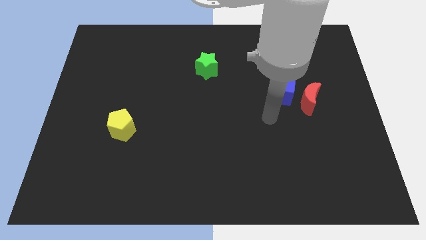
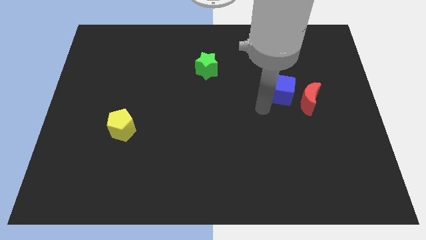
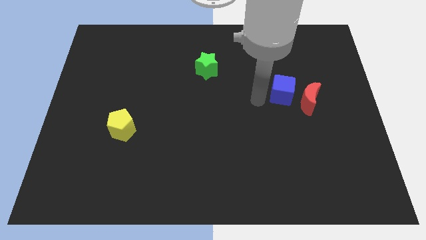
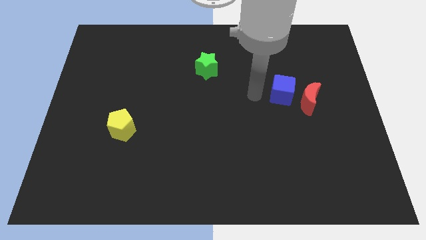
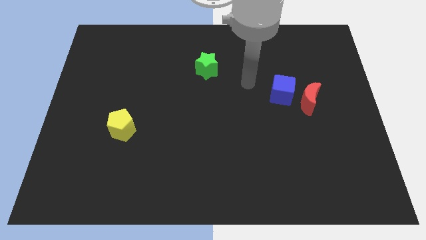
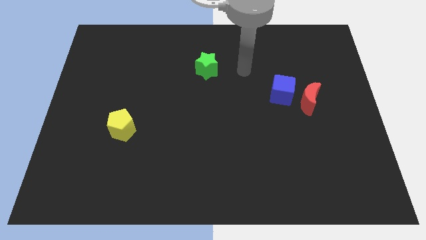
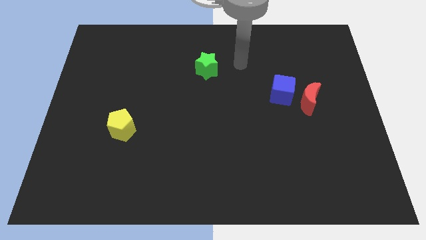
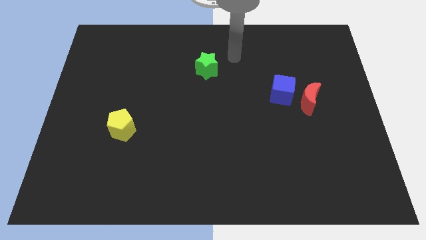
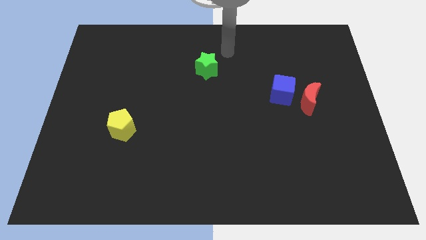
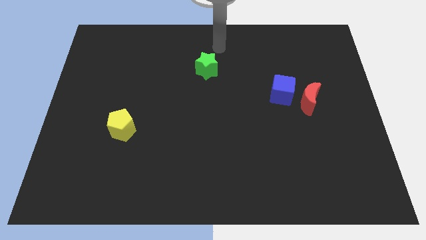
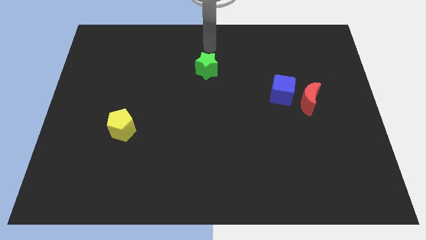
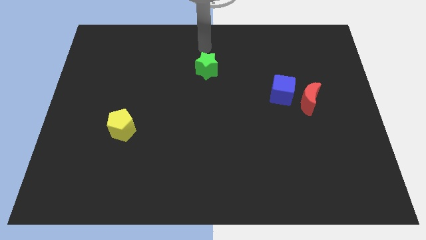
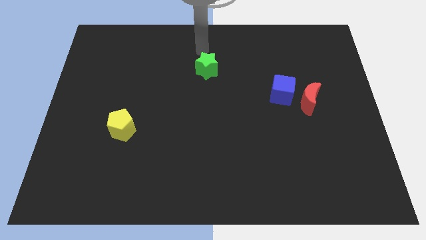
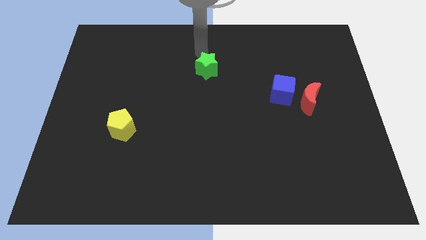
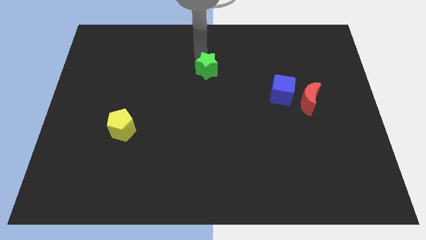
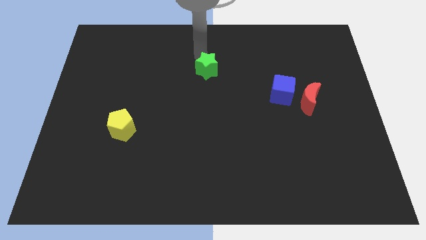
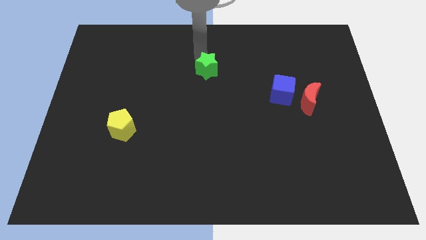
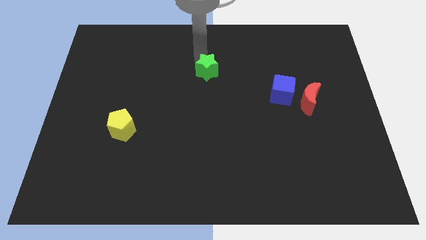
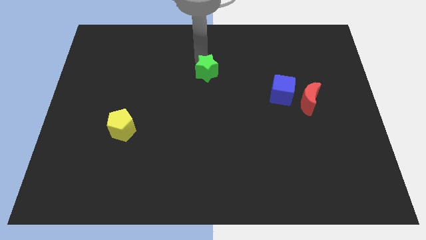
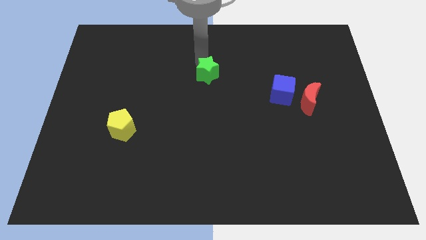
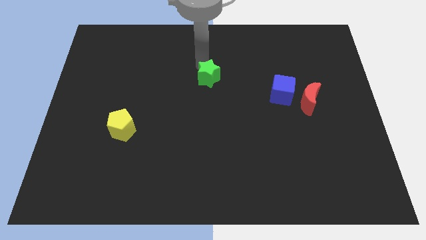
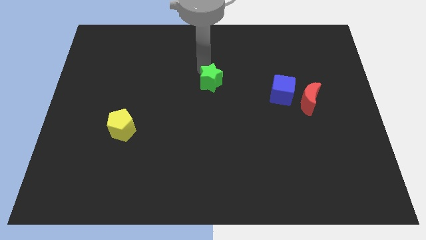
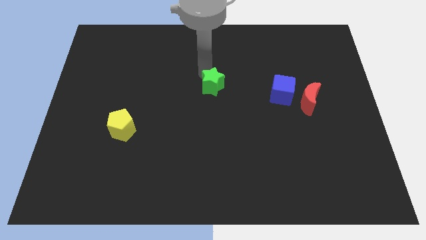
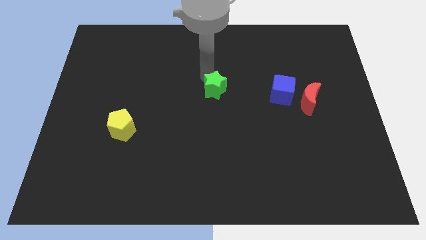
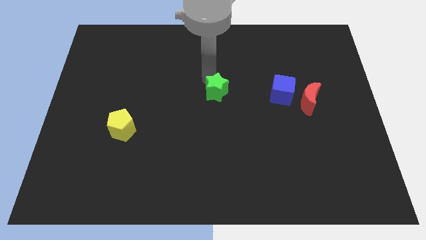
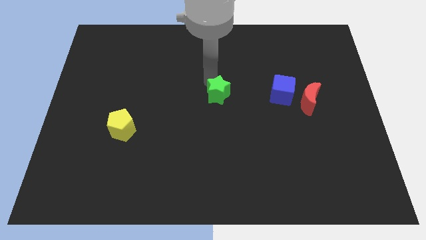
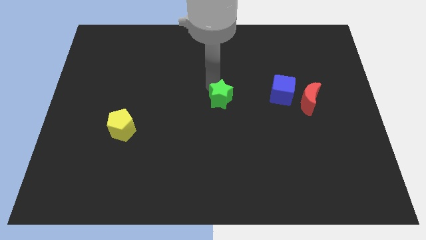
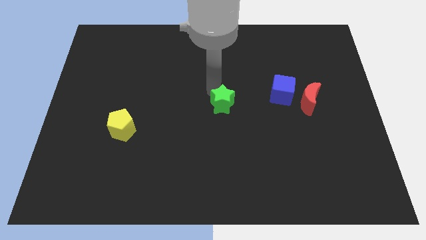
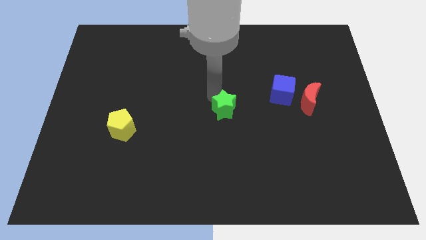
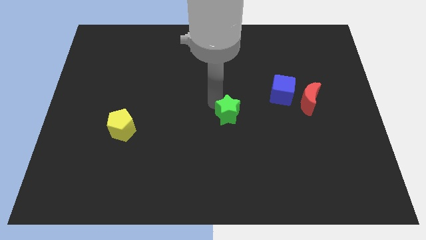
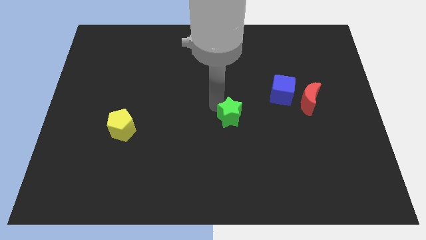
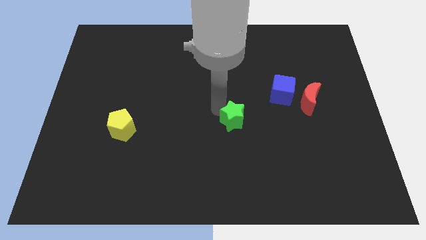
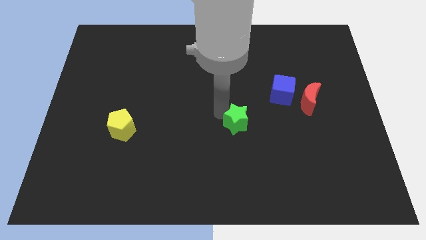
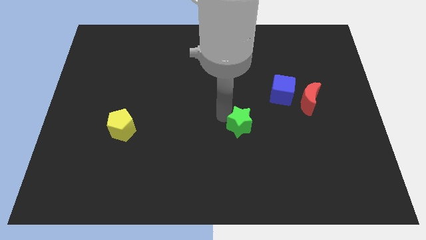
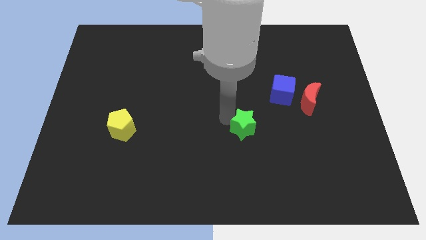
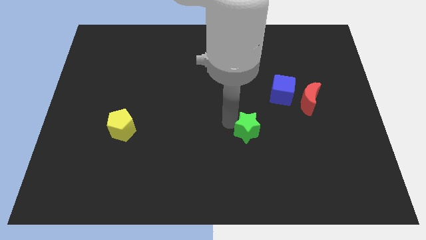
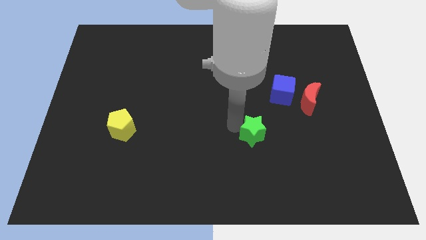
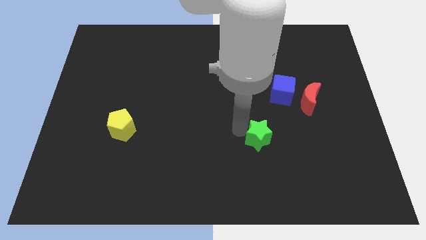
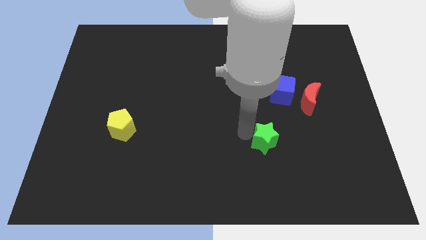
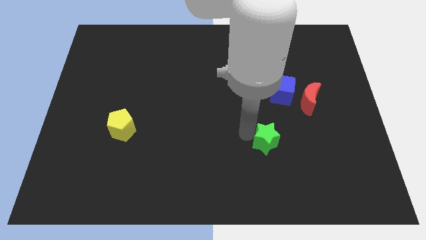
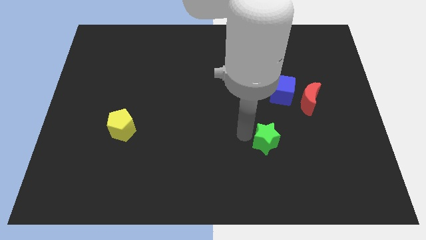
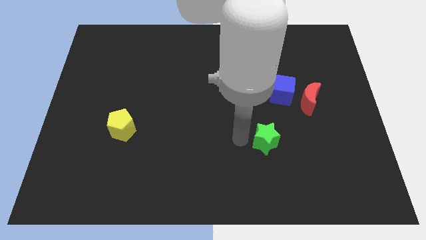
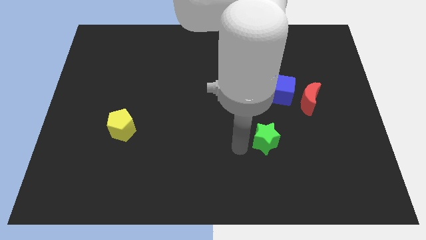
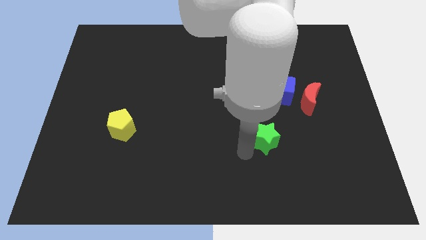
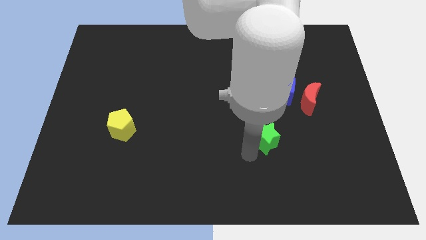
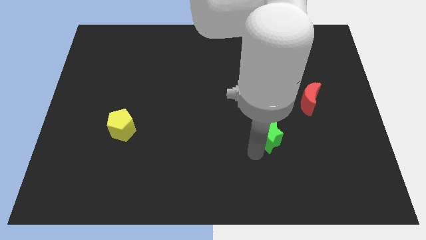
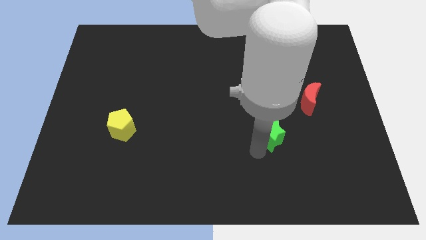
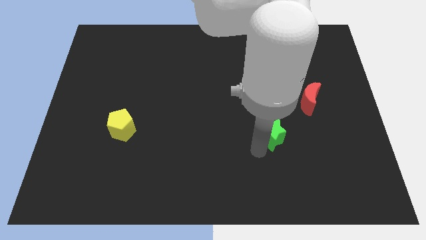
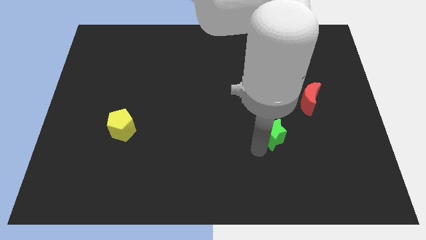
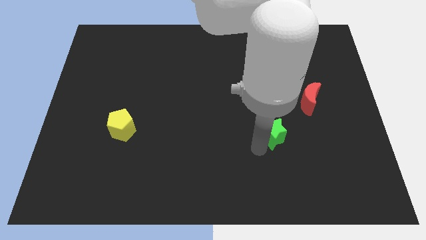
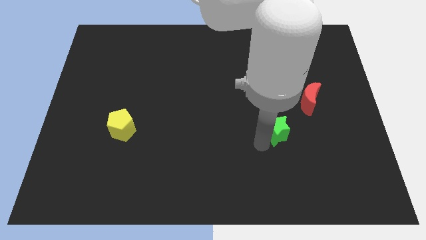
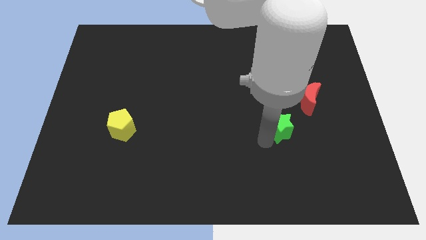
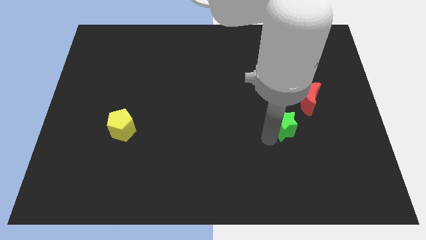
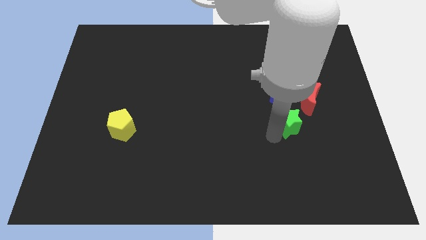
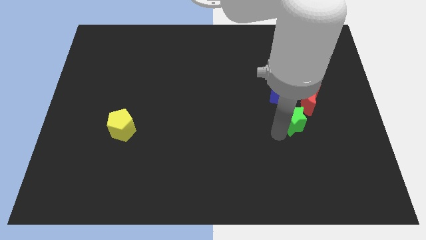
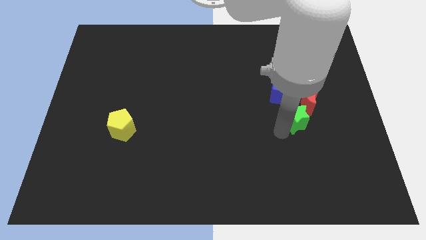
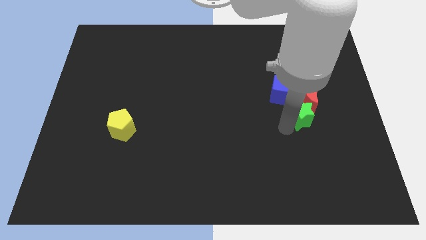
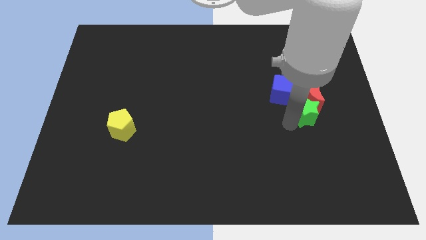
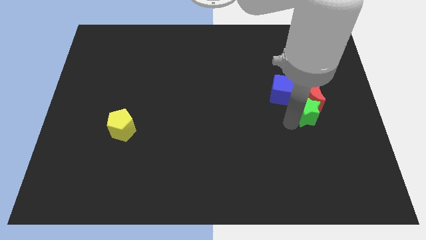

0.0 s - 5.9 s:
move the green block to the red moon

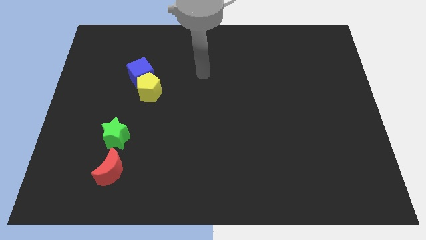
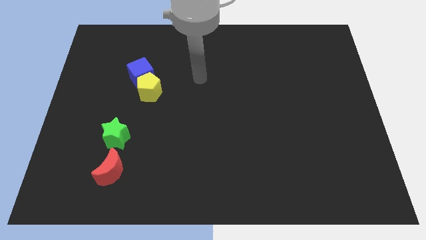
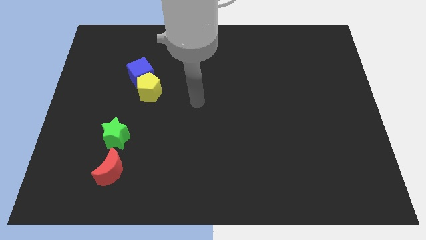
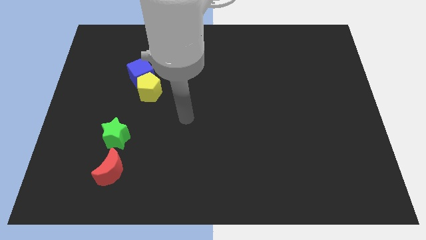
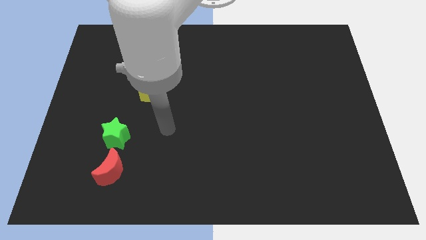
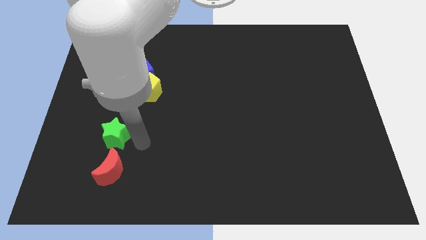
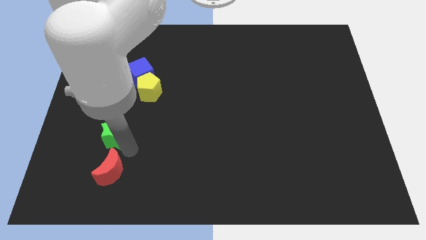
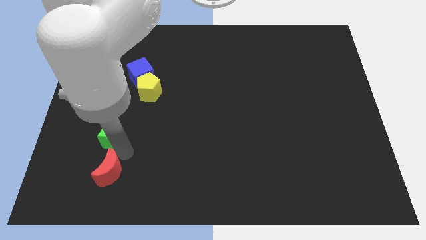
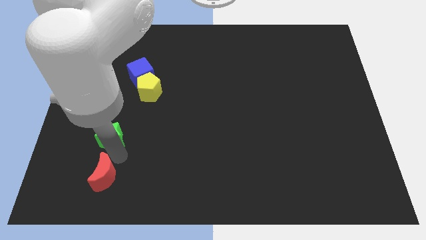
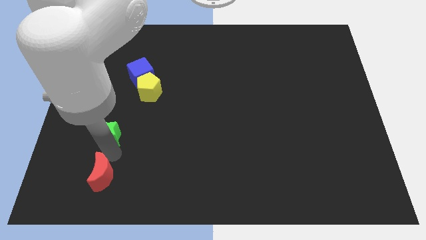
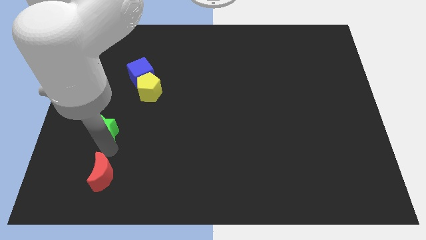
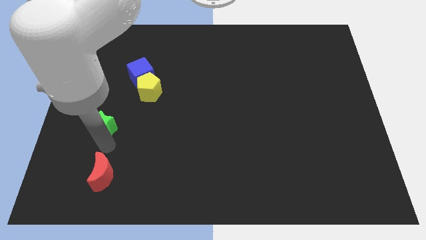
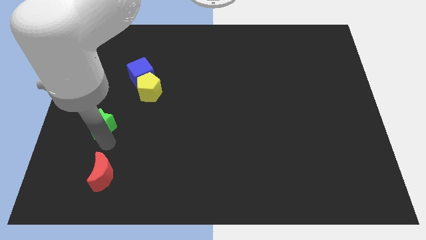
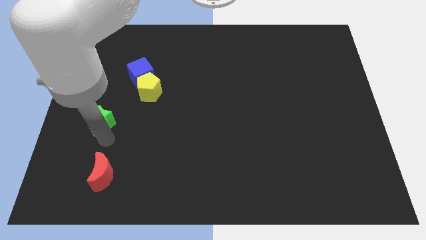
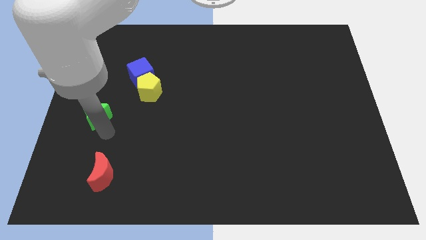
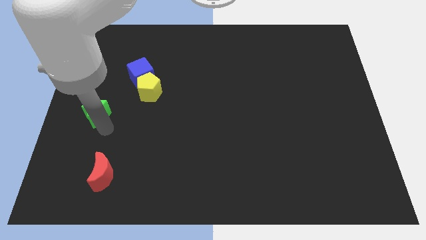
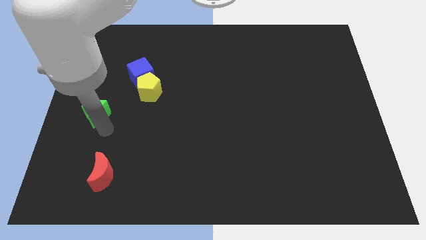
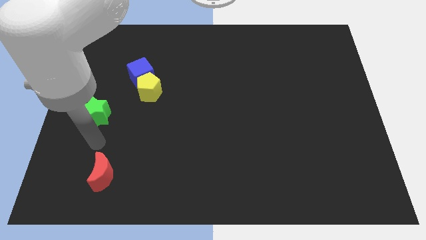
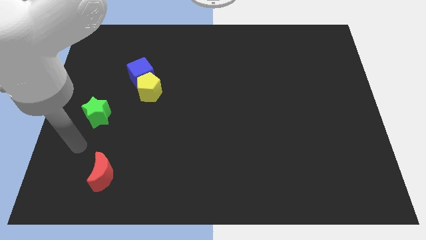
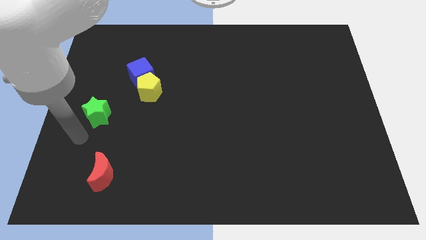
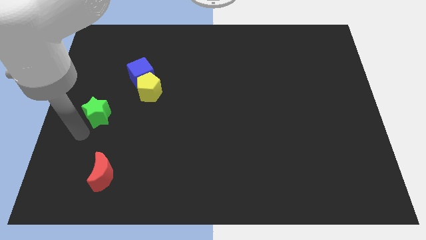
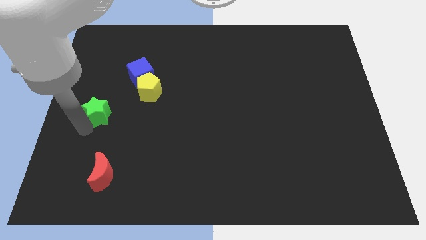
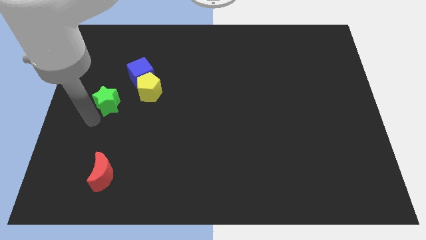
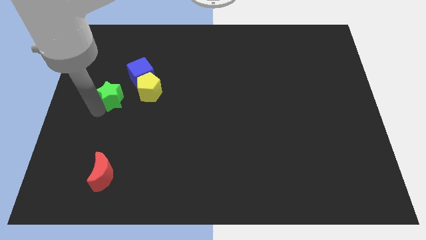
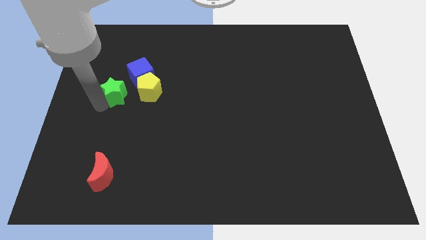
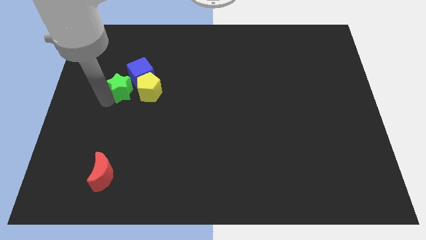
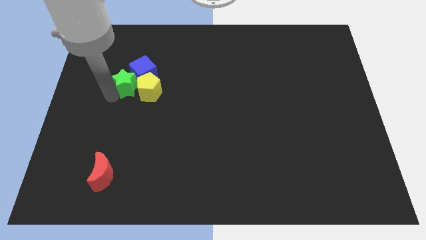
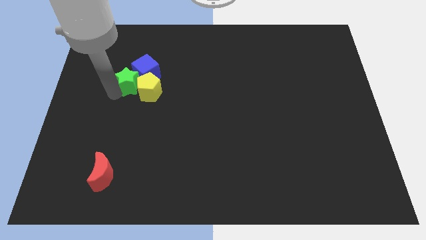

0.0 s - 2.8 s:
slide the star to the blue block
